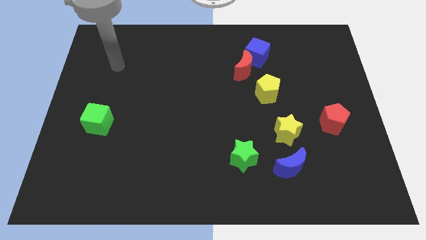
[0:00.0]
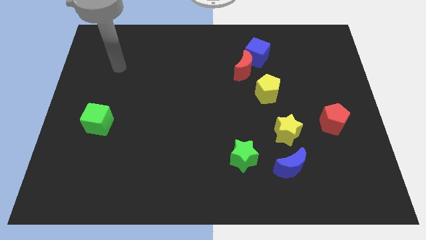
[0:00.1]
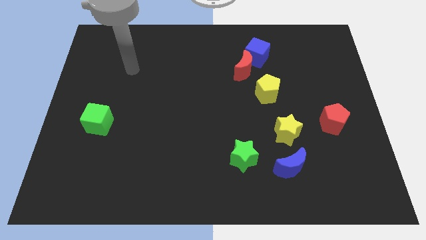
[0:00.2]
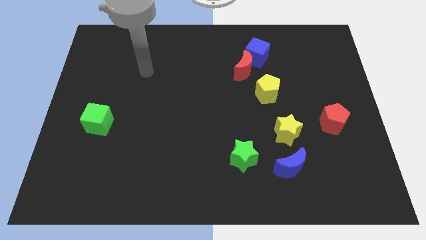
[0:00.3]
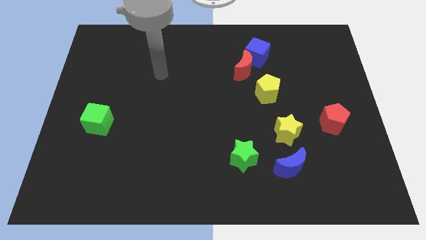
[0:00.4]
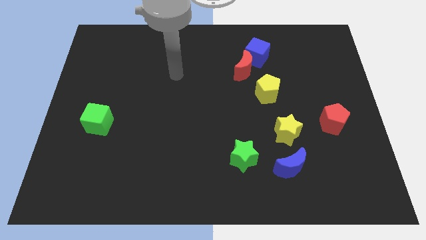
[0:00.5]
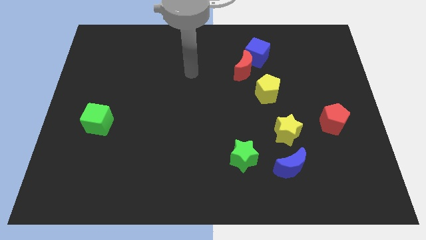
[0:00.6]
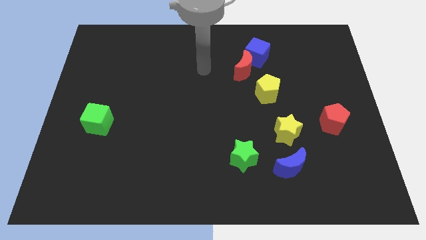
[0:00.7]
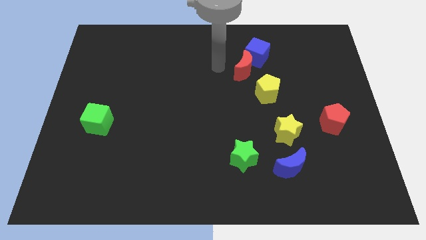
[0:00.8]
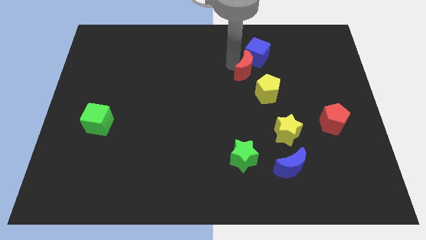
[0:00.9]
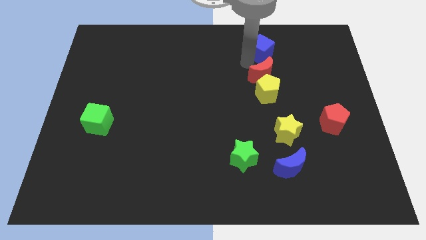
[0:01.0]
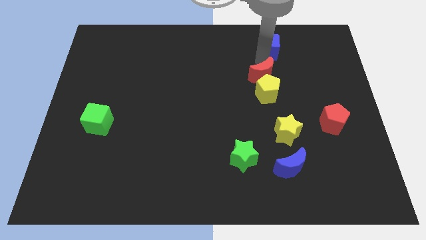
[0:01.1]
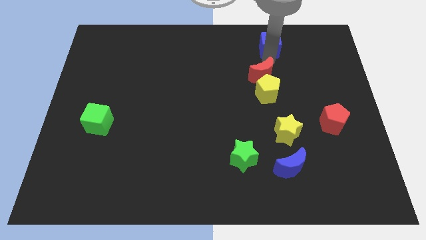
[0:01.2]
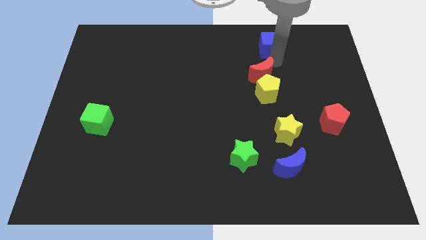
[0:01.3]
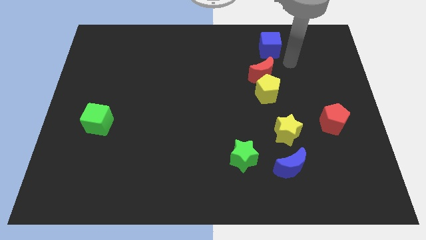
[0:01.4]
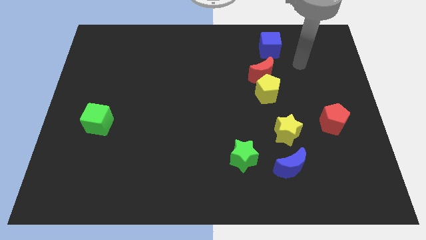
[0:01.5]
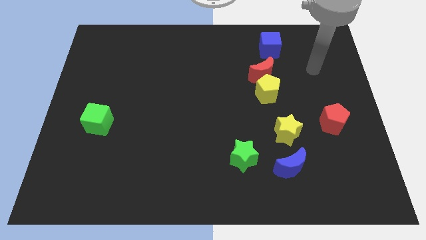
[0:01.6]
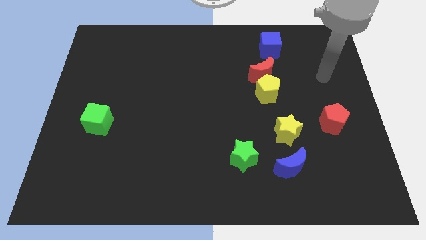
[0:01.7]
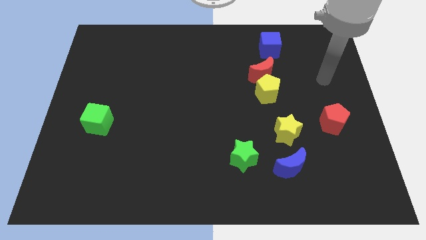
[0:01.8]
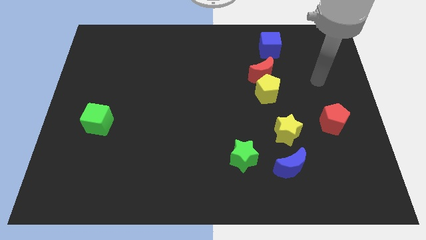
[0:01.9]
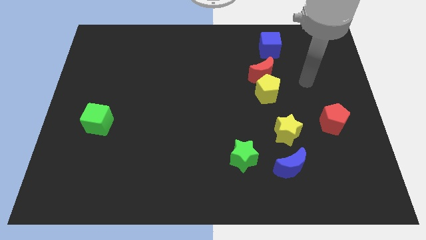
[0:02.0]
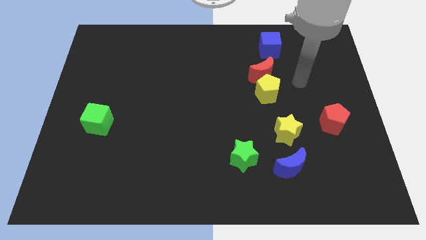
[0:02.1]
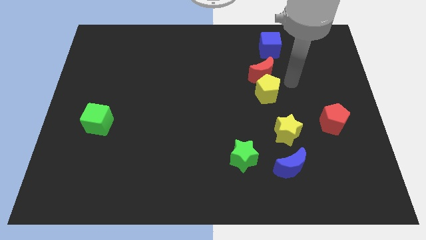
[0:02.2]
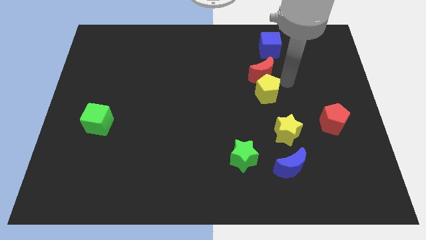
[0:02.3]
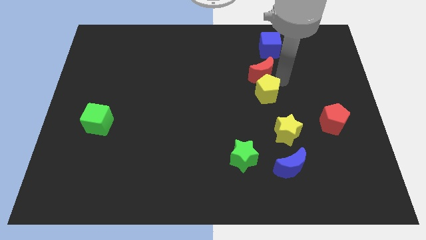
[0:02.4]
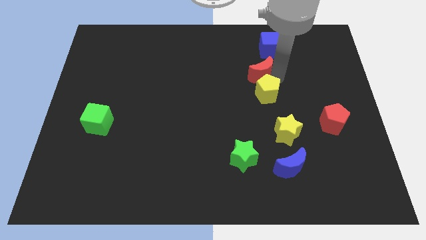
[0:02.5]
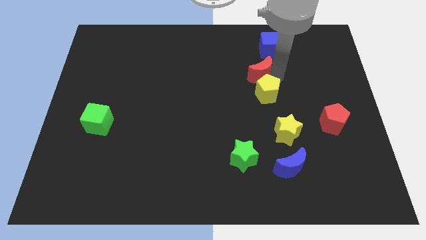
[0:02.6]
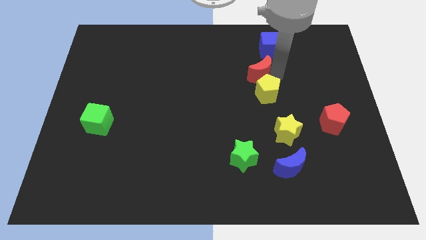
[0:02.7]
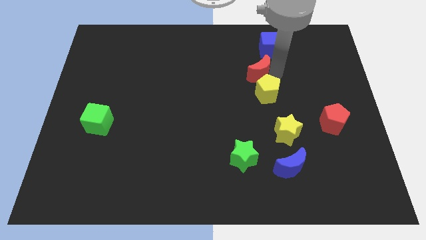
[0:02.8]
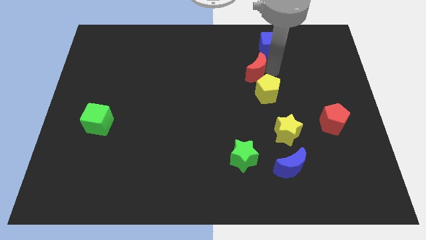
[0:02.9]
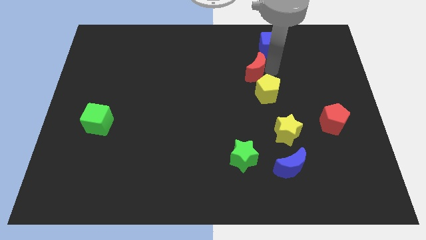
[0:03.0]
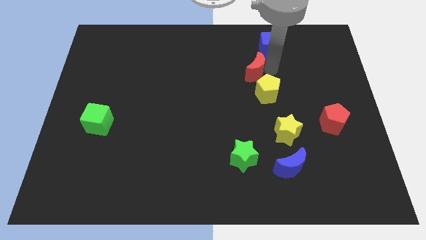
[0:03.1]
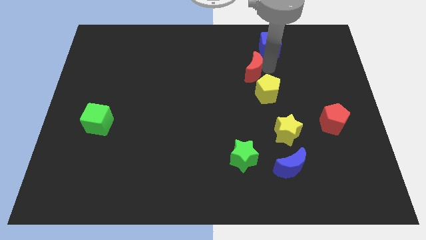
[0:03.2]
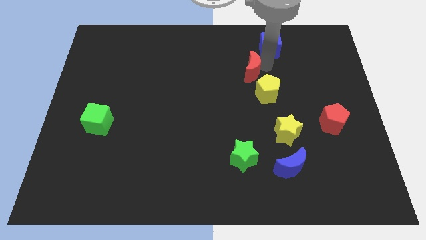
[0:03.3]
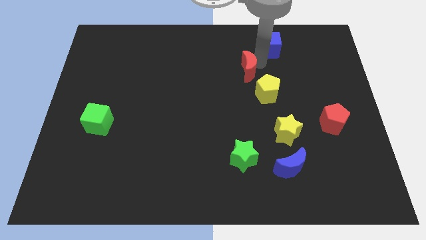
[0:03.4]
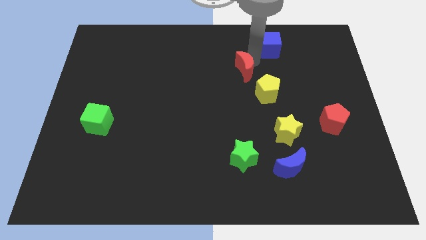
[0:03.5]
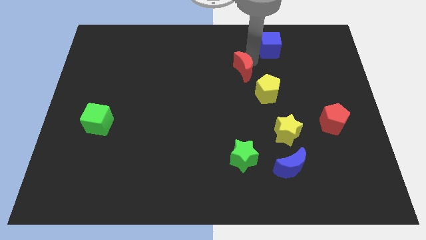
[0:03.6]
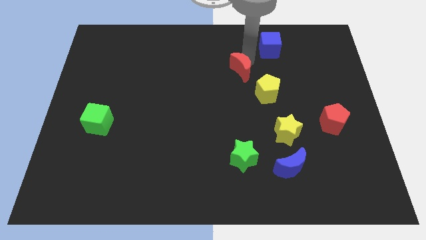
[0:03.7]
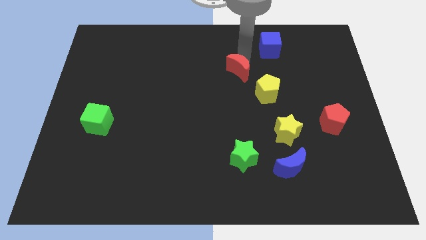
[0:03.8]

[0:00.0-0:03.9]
push the red moon towards the left side of the board

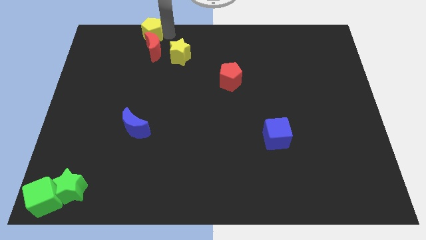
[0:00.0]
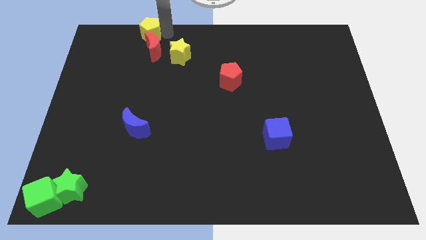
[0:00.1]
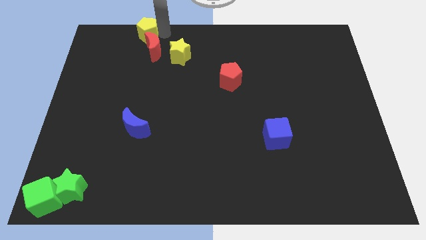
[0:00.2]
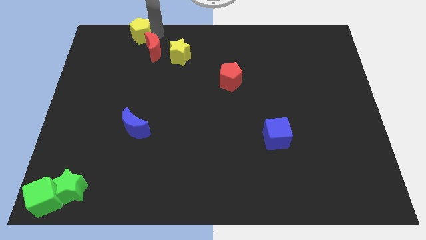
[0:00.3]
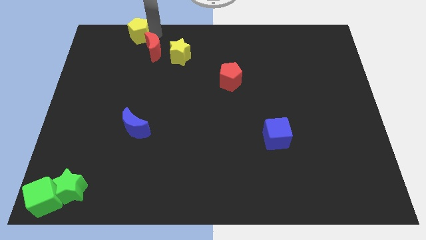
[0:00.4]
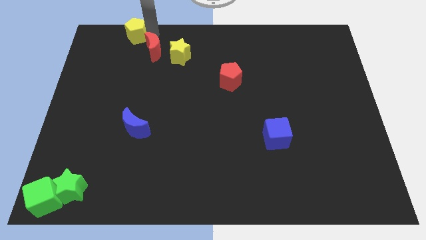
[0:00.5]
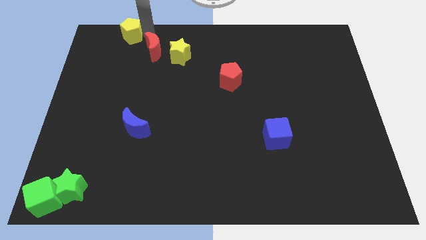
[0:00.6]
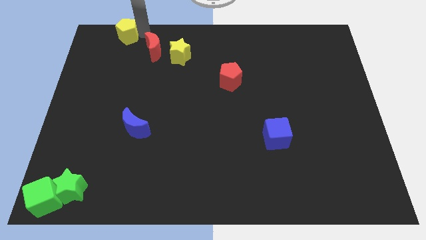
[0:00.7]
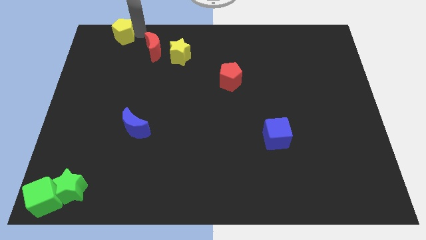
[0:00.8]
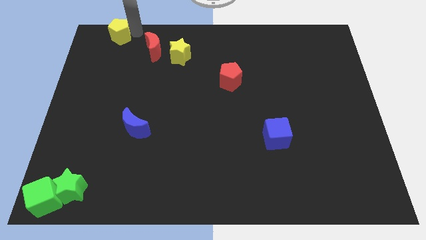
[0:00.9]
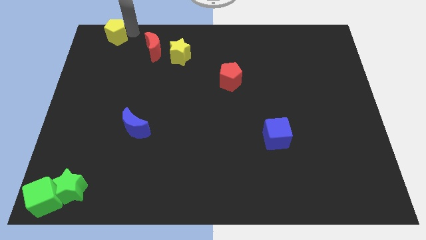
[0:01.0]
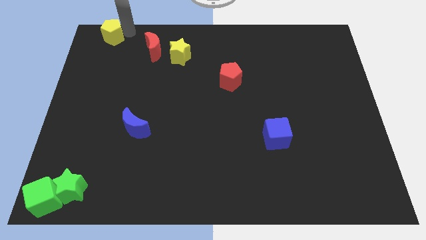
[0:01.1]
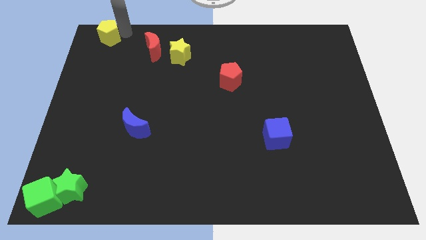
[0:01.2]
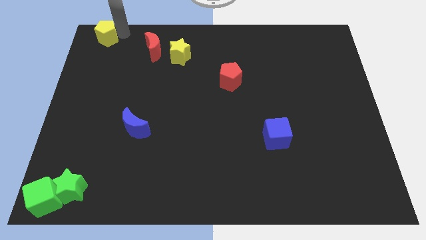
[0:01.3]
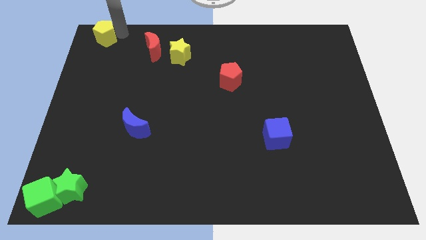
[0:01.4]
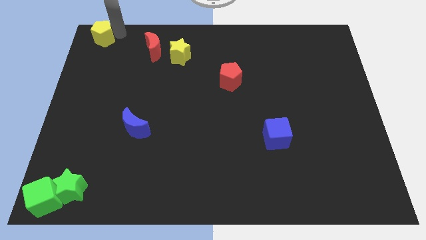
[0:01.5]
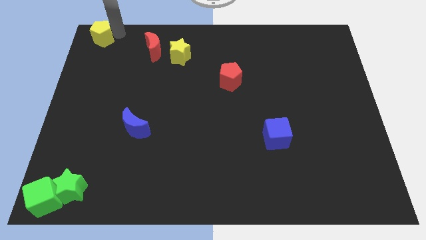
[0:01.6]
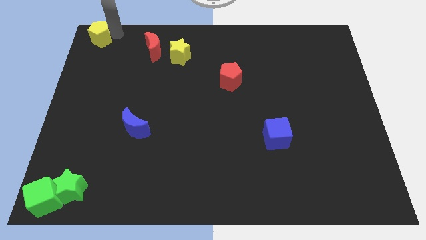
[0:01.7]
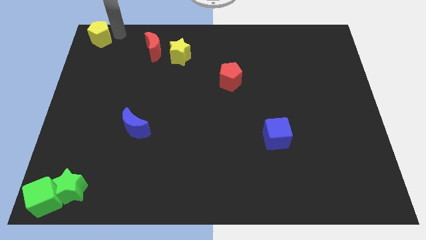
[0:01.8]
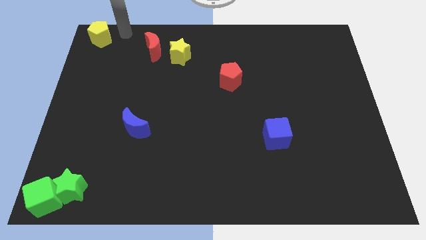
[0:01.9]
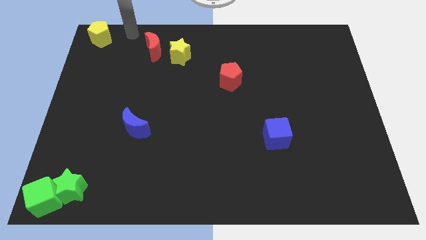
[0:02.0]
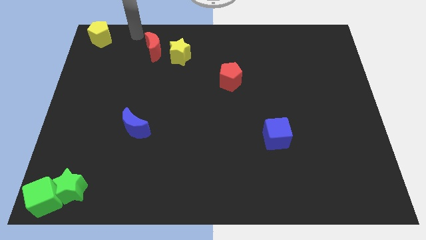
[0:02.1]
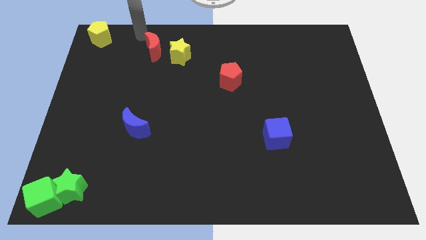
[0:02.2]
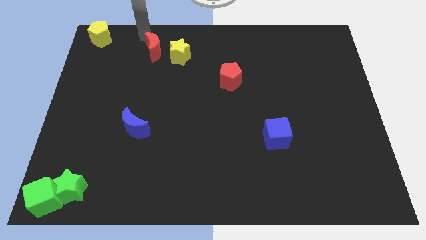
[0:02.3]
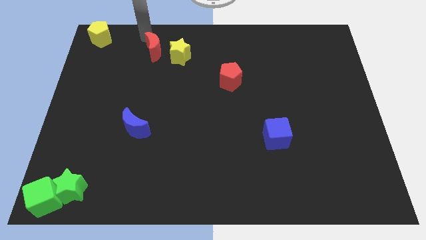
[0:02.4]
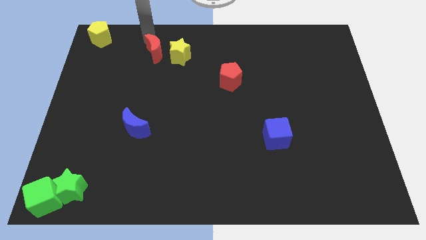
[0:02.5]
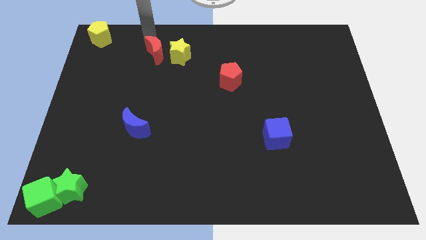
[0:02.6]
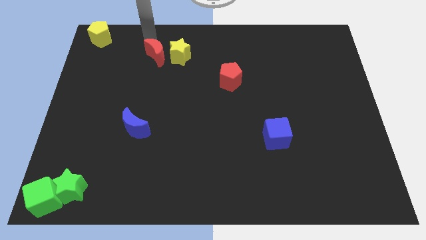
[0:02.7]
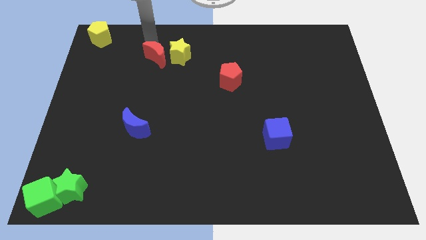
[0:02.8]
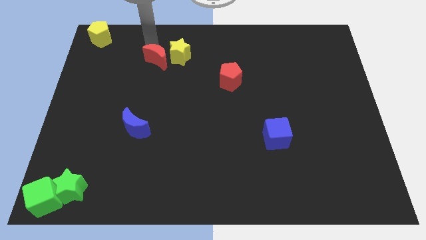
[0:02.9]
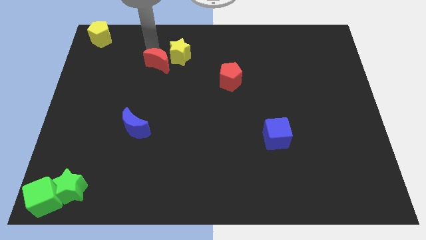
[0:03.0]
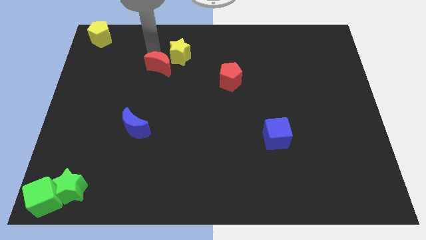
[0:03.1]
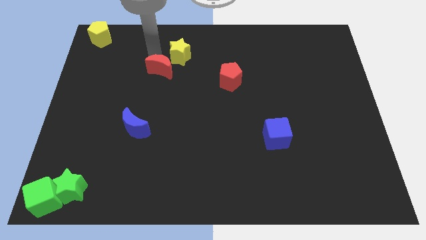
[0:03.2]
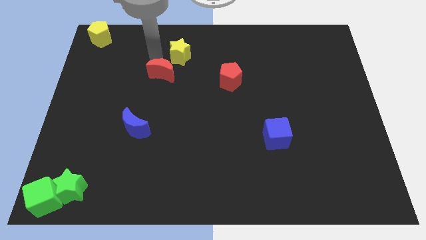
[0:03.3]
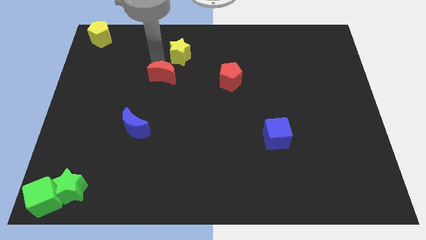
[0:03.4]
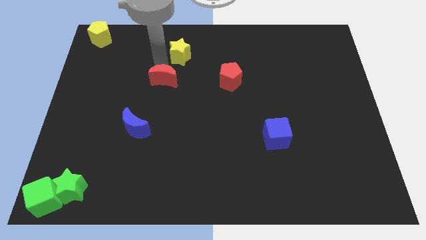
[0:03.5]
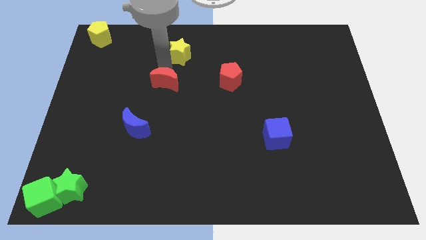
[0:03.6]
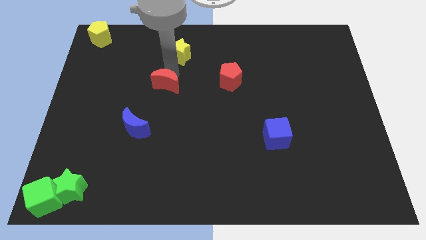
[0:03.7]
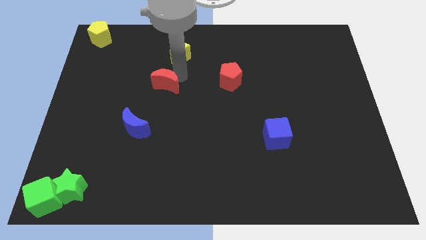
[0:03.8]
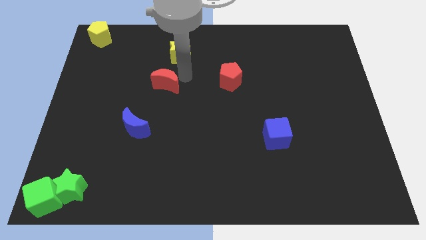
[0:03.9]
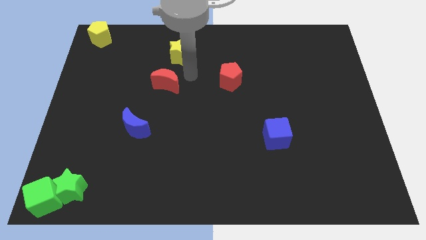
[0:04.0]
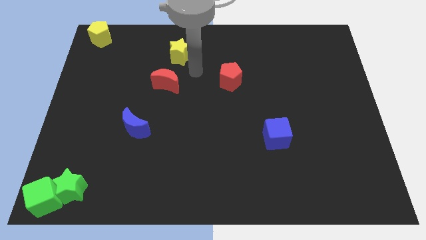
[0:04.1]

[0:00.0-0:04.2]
separate the yellow pentagon and the red moon

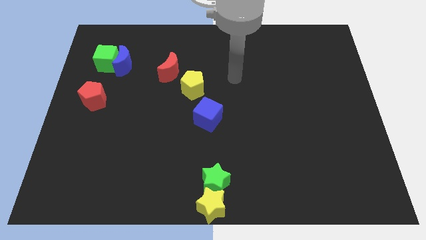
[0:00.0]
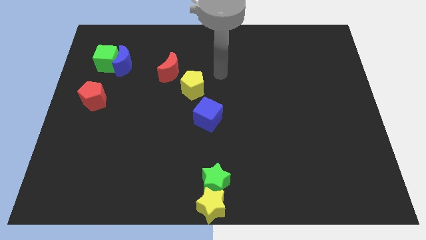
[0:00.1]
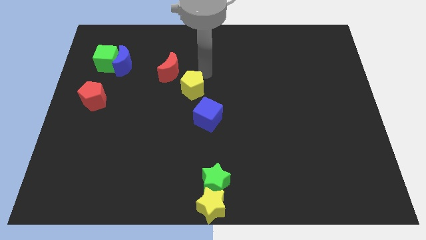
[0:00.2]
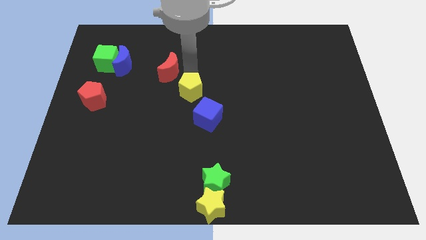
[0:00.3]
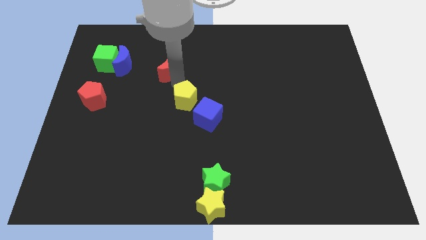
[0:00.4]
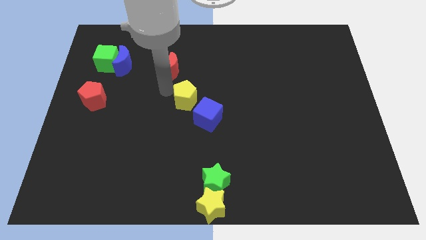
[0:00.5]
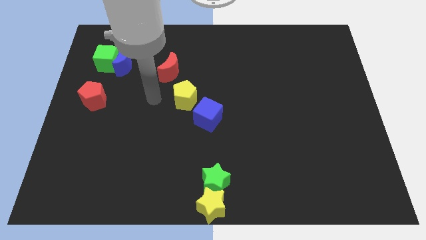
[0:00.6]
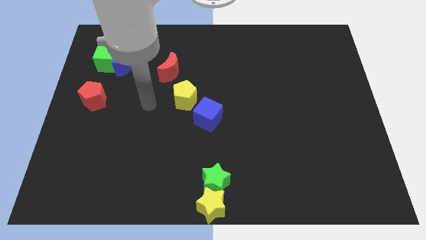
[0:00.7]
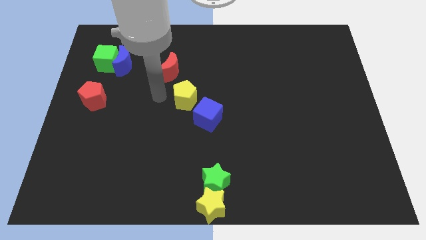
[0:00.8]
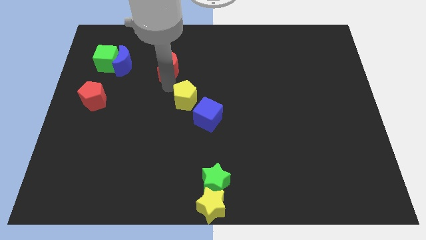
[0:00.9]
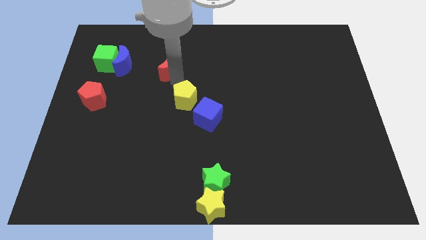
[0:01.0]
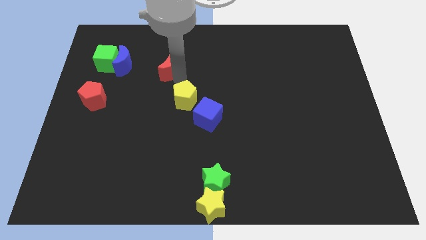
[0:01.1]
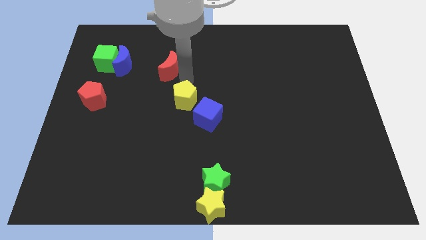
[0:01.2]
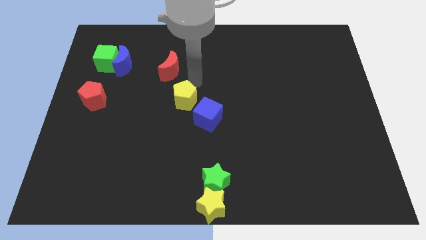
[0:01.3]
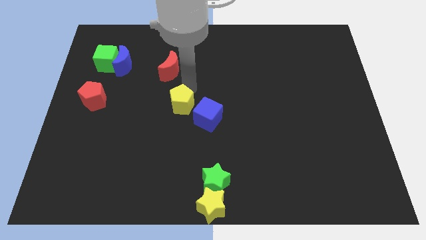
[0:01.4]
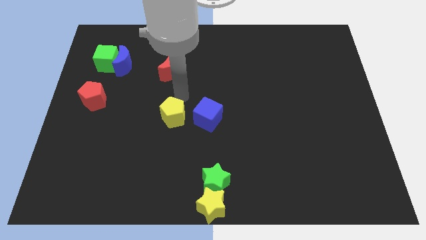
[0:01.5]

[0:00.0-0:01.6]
move the yellow pentagon to the left of the blue cube
